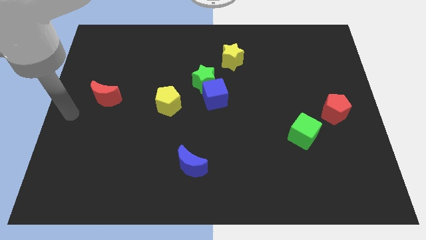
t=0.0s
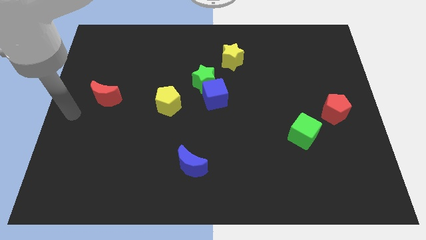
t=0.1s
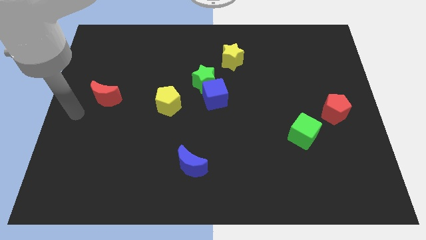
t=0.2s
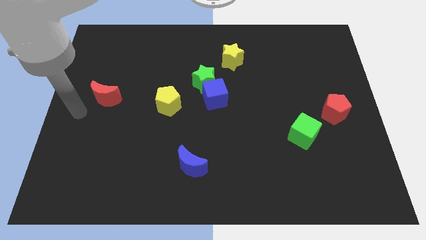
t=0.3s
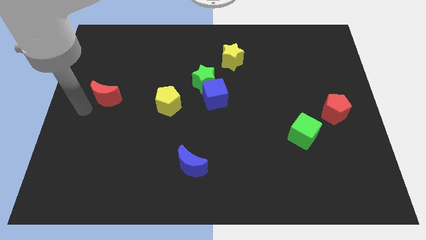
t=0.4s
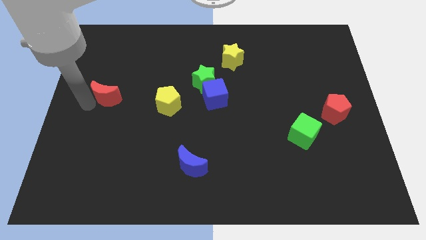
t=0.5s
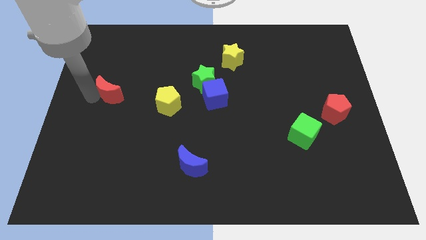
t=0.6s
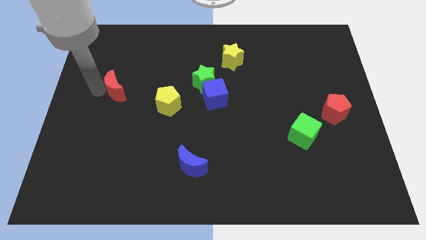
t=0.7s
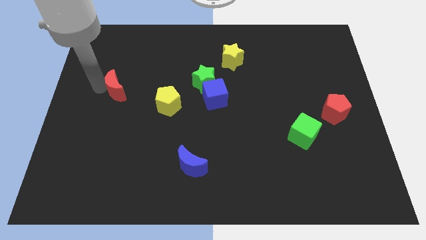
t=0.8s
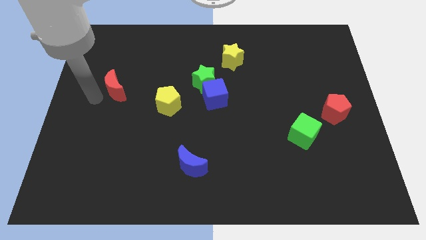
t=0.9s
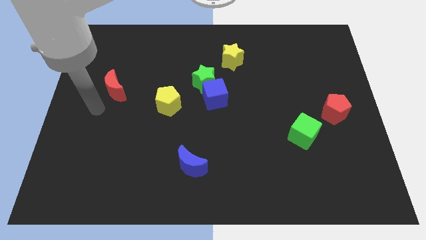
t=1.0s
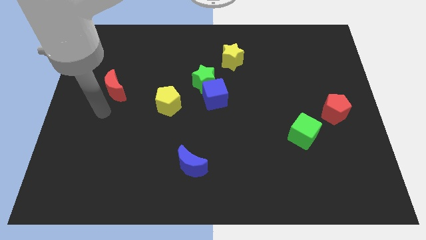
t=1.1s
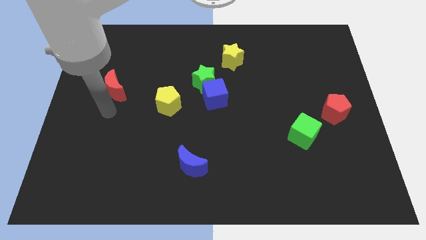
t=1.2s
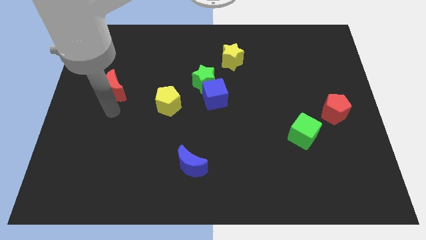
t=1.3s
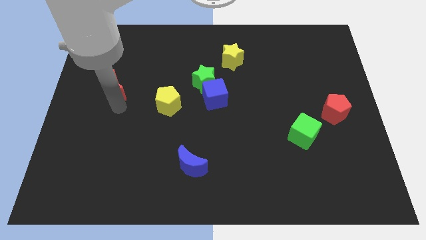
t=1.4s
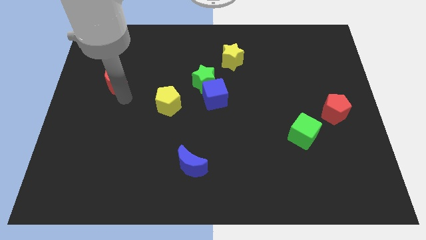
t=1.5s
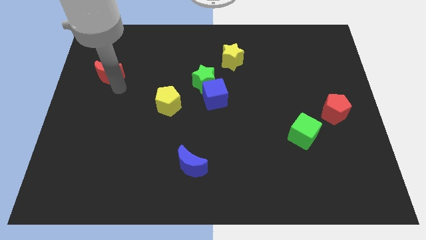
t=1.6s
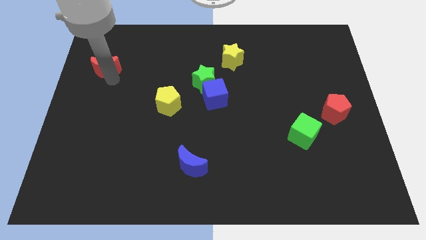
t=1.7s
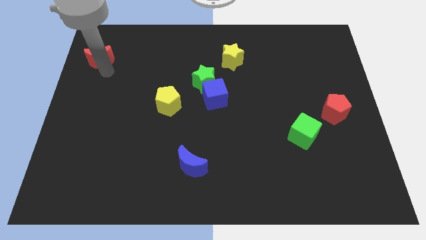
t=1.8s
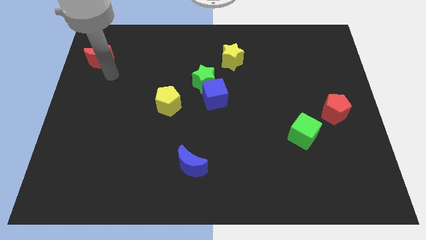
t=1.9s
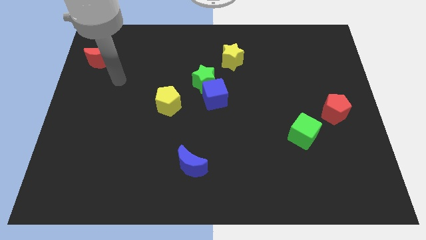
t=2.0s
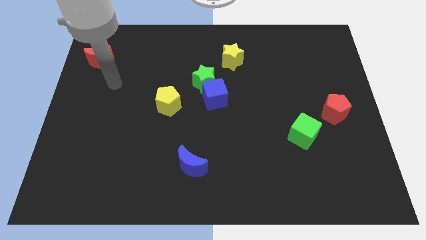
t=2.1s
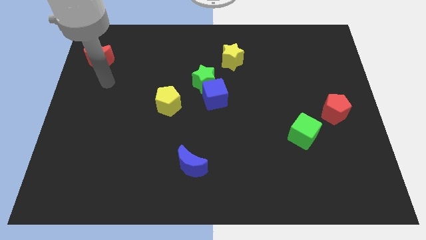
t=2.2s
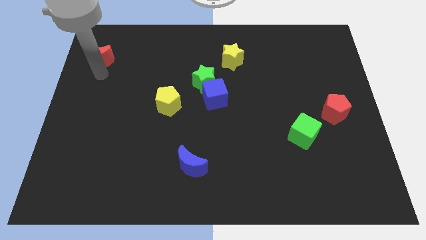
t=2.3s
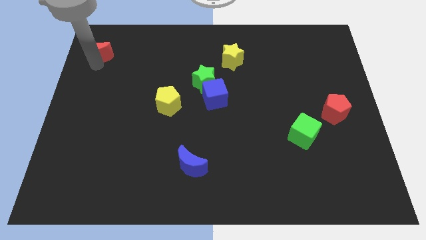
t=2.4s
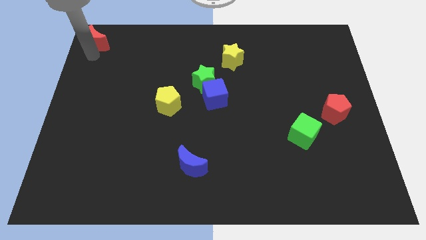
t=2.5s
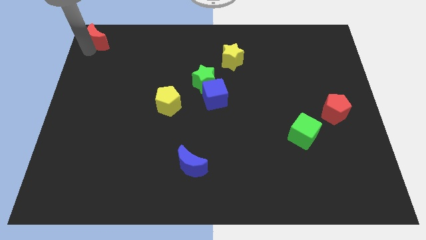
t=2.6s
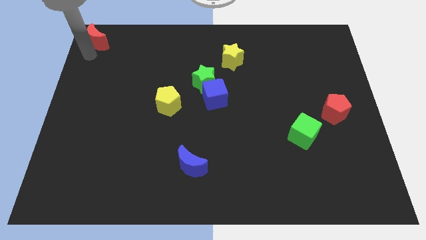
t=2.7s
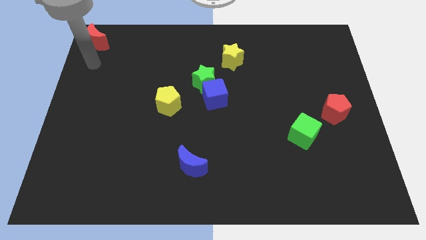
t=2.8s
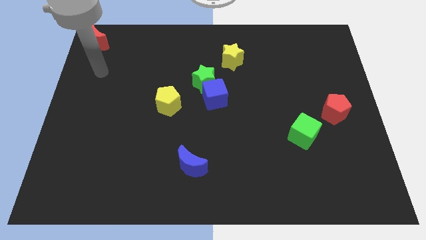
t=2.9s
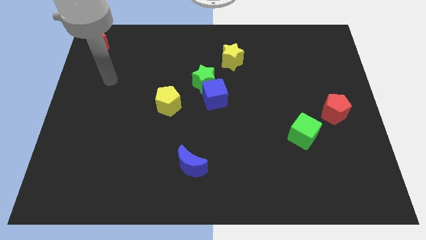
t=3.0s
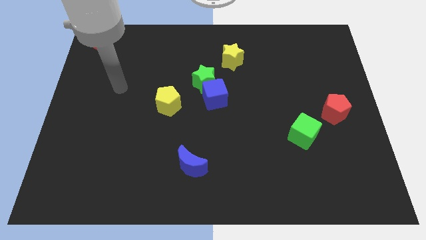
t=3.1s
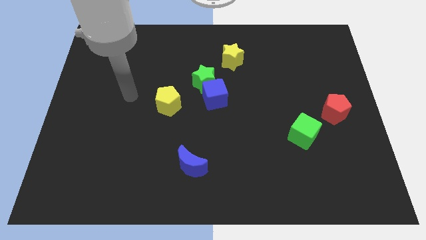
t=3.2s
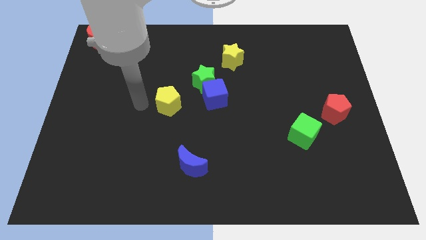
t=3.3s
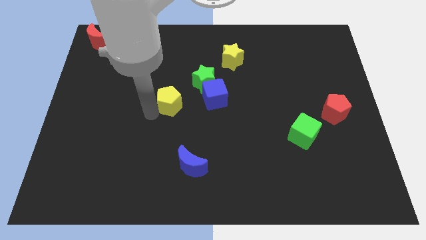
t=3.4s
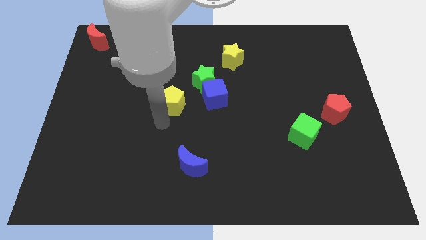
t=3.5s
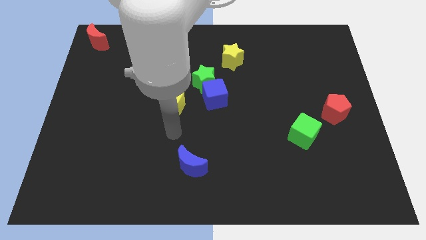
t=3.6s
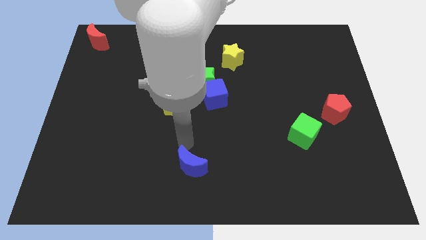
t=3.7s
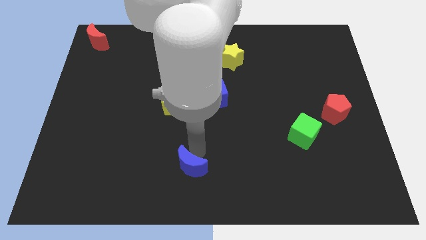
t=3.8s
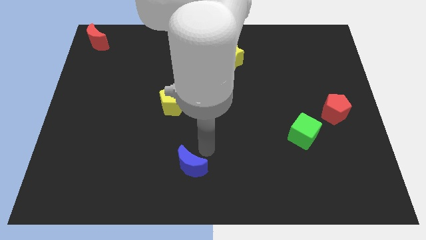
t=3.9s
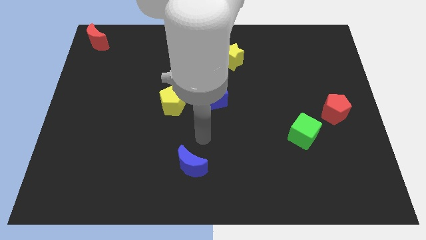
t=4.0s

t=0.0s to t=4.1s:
push the red crescent to top left corner of thr board

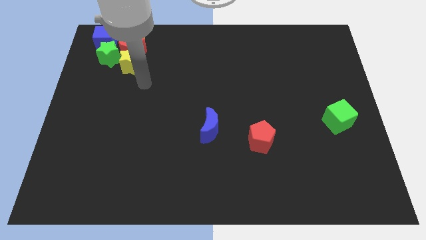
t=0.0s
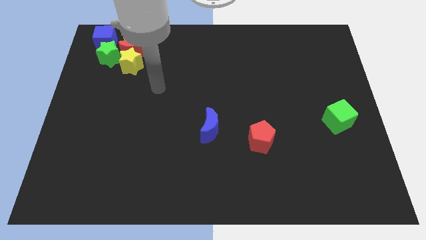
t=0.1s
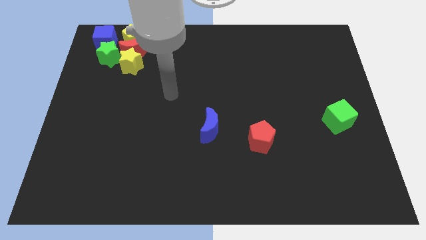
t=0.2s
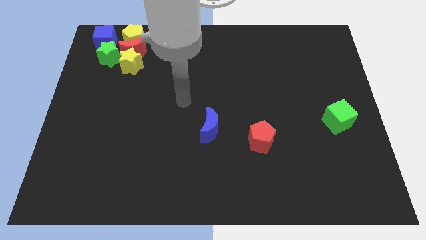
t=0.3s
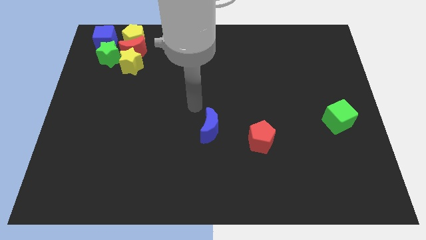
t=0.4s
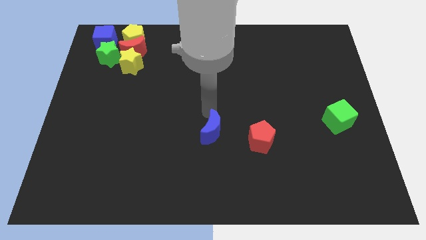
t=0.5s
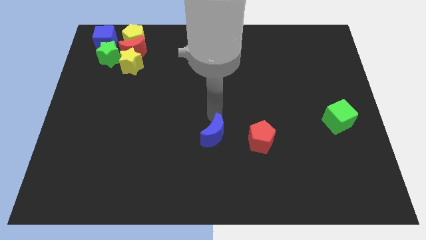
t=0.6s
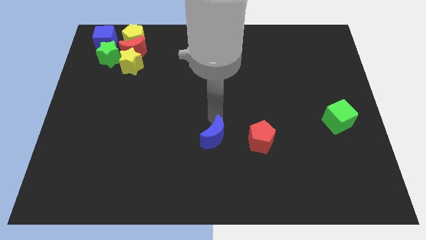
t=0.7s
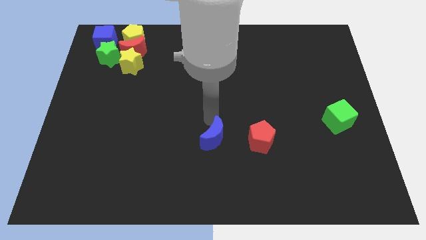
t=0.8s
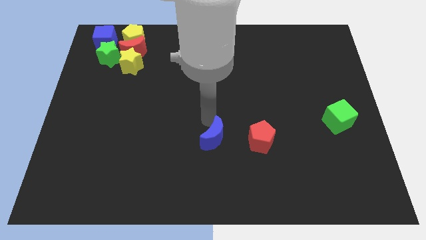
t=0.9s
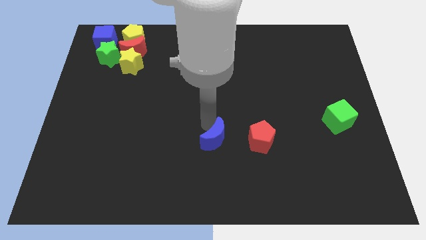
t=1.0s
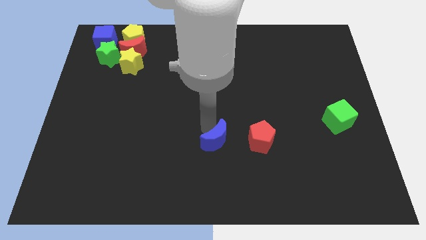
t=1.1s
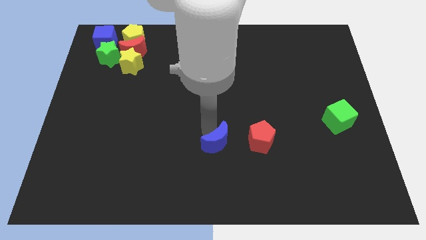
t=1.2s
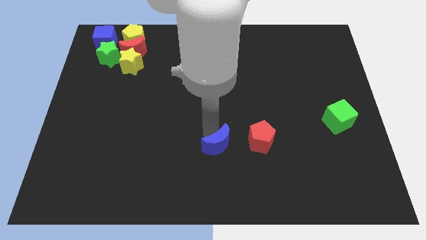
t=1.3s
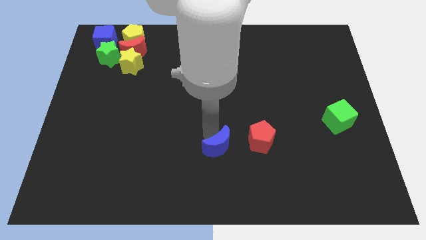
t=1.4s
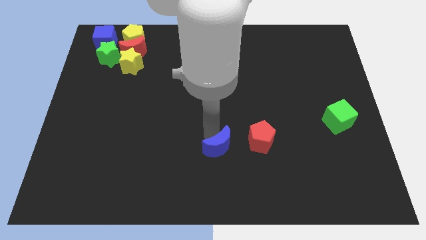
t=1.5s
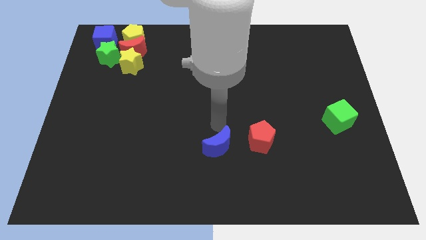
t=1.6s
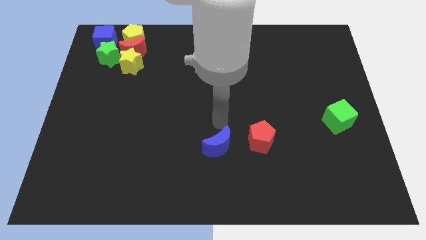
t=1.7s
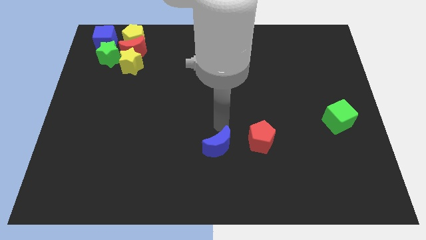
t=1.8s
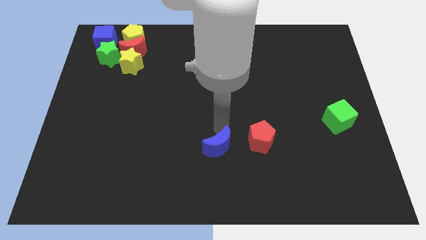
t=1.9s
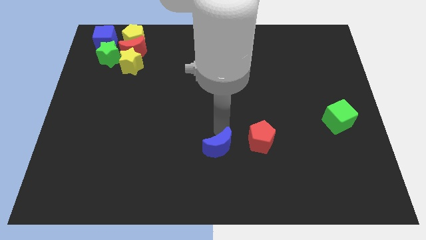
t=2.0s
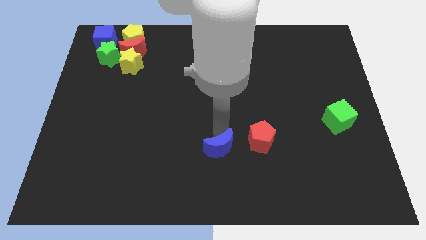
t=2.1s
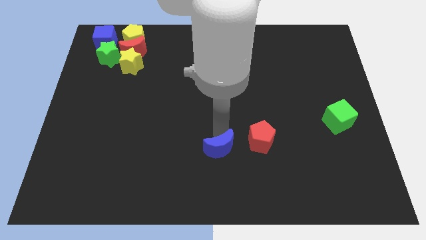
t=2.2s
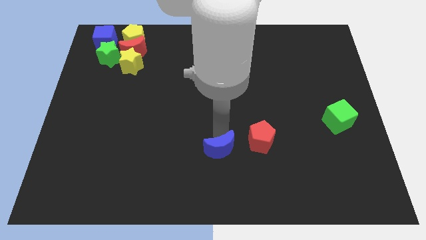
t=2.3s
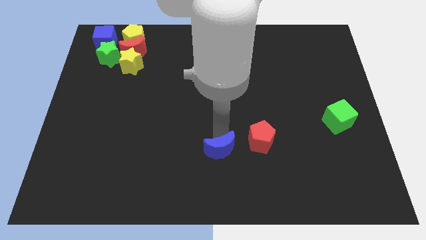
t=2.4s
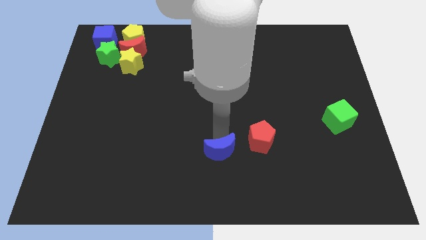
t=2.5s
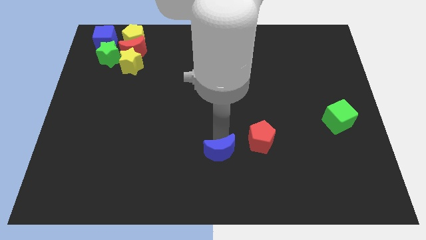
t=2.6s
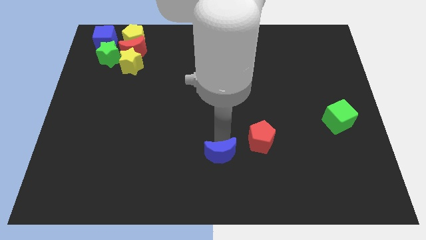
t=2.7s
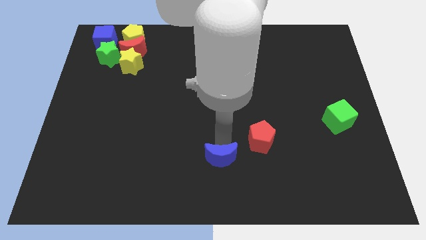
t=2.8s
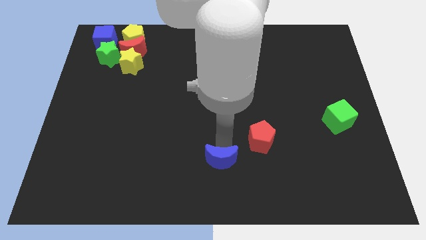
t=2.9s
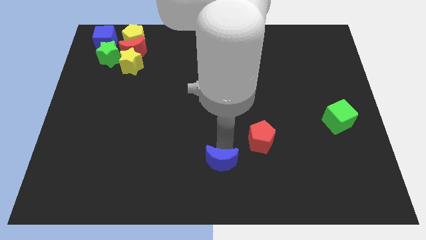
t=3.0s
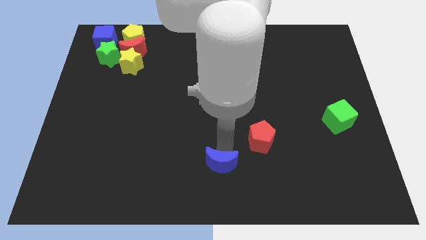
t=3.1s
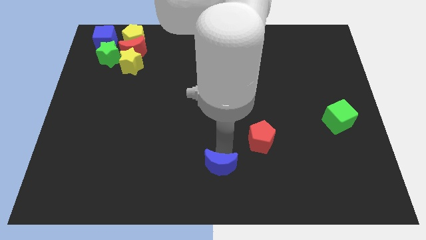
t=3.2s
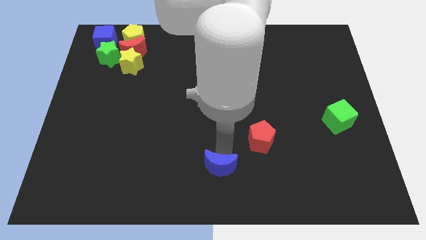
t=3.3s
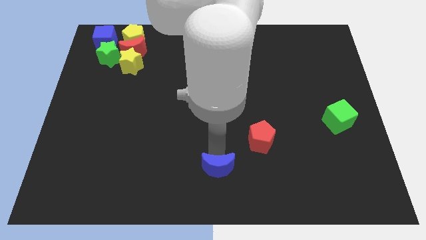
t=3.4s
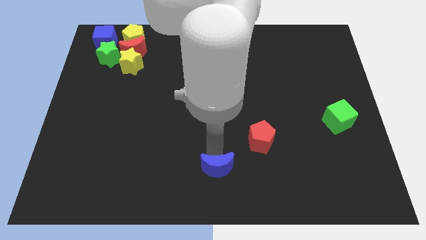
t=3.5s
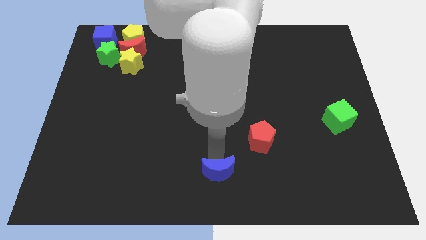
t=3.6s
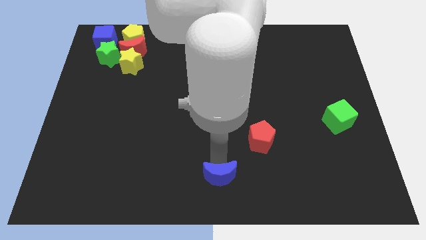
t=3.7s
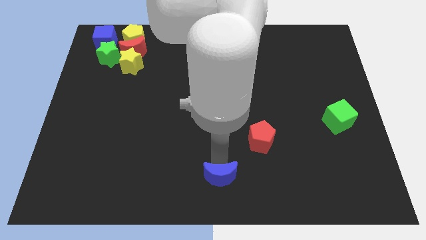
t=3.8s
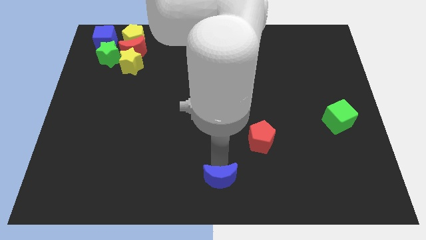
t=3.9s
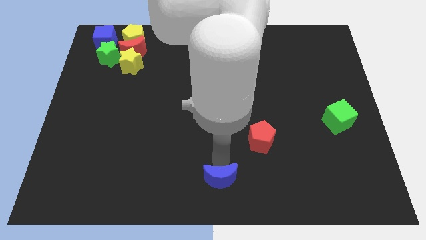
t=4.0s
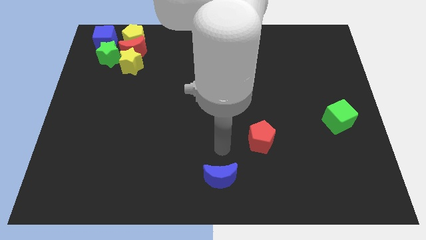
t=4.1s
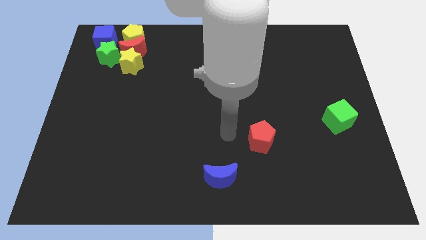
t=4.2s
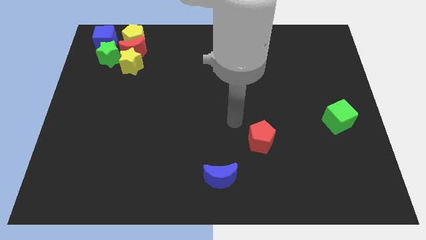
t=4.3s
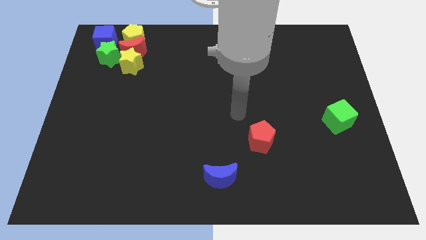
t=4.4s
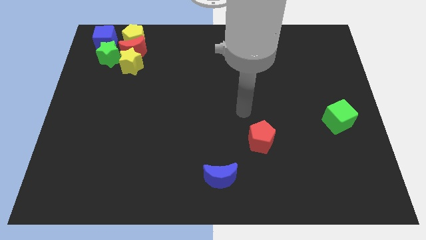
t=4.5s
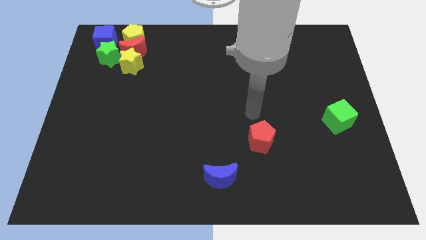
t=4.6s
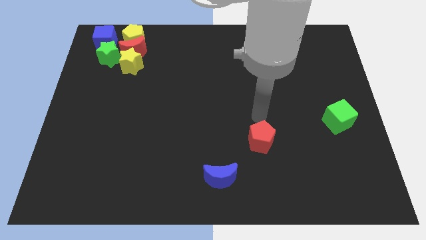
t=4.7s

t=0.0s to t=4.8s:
move the blue moon slightly towards the bottom

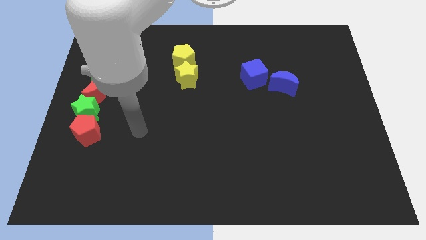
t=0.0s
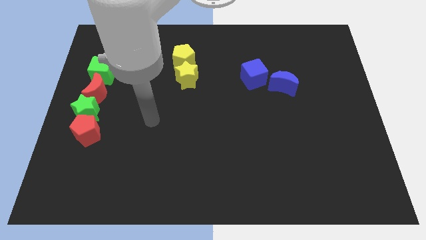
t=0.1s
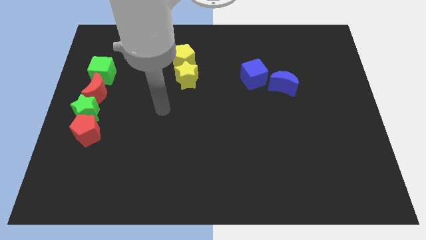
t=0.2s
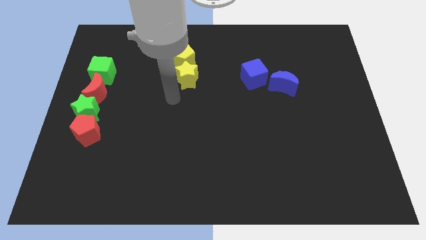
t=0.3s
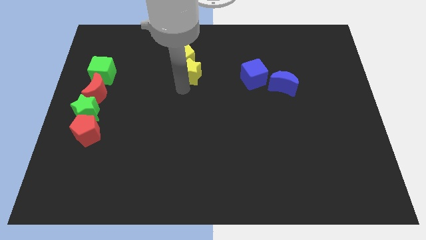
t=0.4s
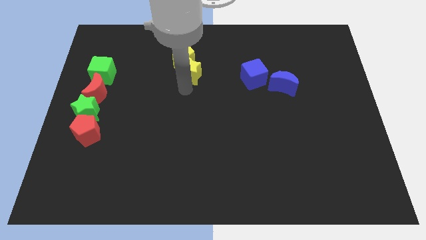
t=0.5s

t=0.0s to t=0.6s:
touch the bottom of yellow star
